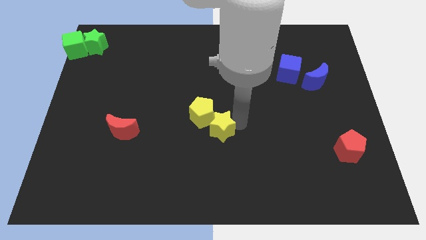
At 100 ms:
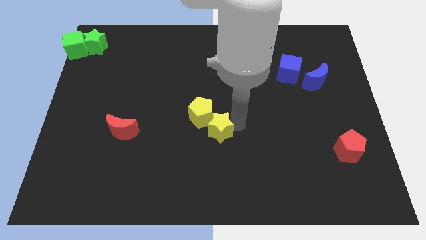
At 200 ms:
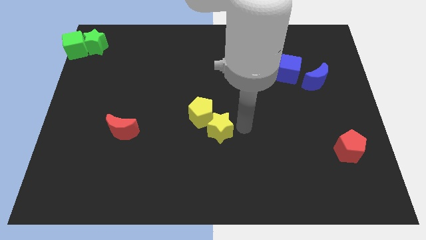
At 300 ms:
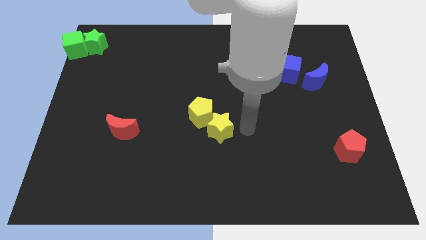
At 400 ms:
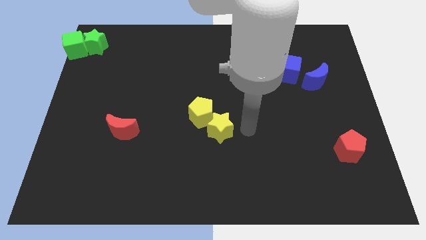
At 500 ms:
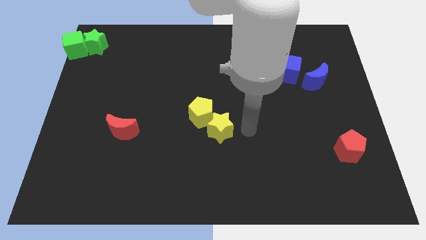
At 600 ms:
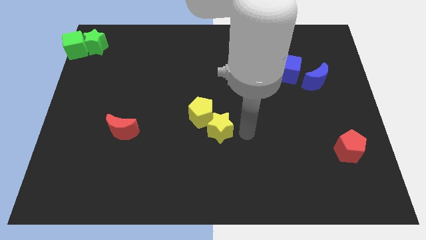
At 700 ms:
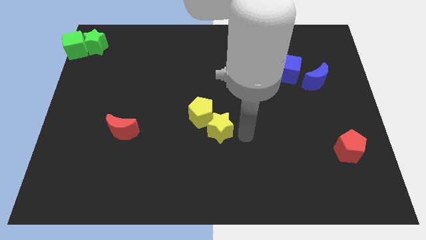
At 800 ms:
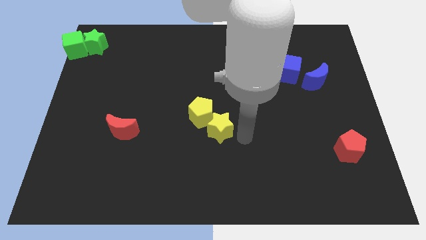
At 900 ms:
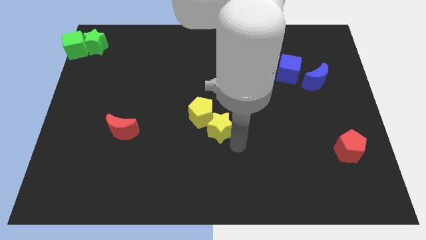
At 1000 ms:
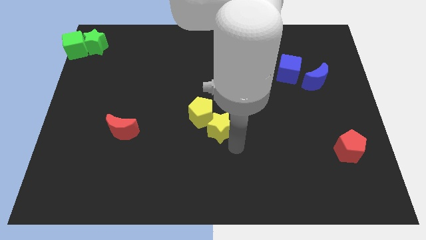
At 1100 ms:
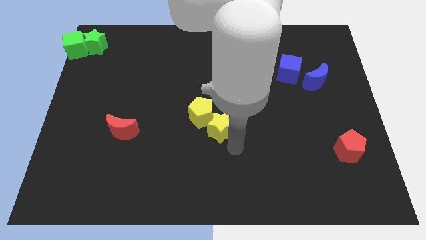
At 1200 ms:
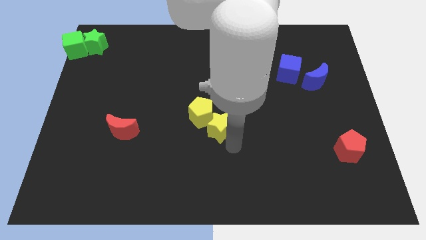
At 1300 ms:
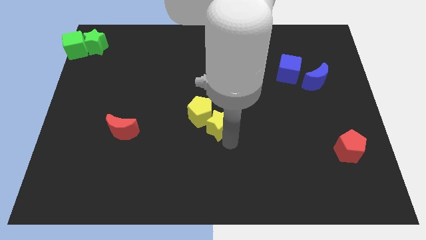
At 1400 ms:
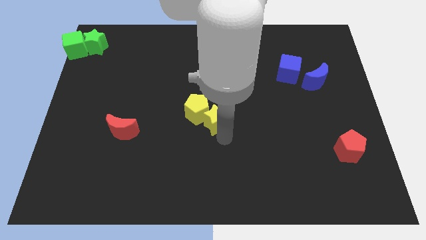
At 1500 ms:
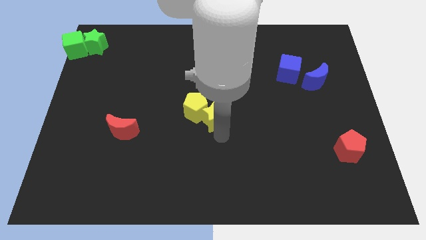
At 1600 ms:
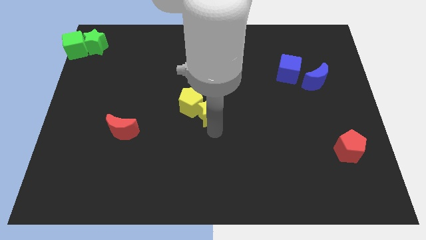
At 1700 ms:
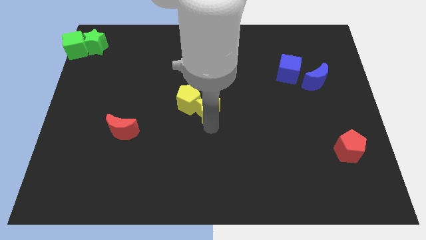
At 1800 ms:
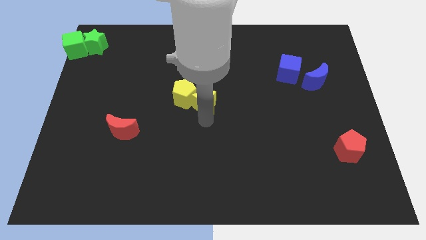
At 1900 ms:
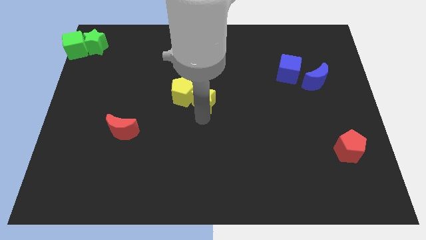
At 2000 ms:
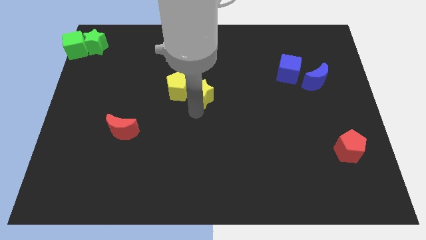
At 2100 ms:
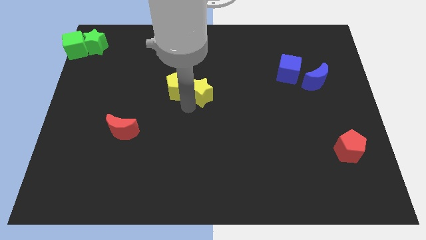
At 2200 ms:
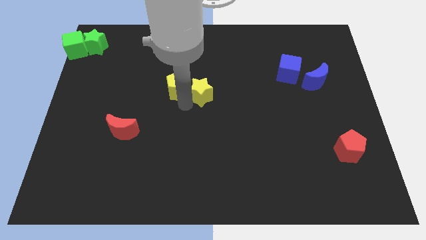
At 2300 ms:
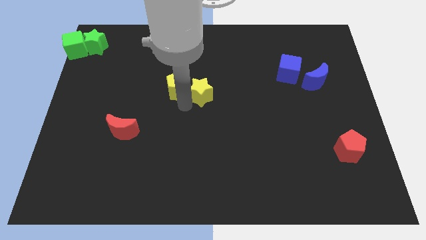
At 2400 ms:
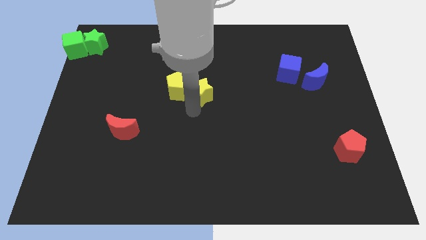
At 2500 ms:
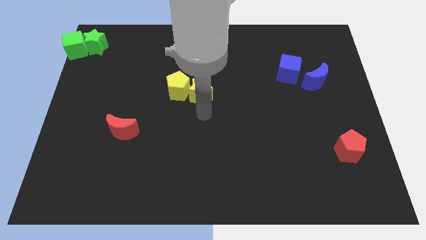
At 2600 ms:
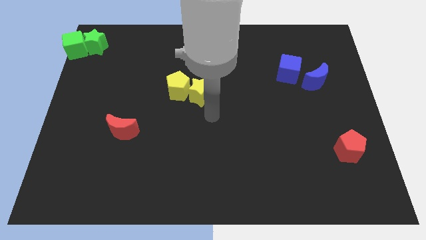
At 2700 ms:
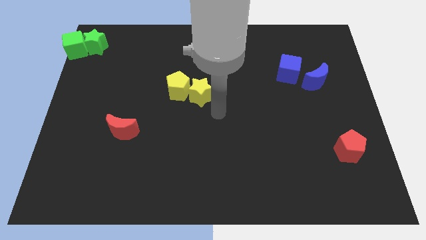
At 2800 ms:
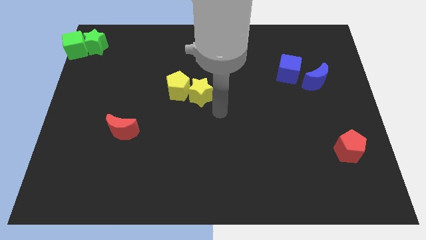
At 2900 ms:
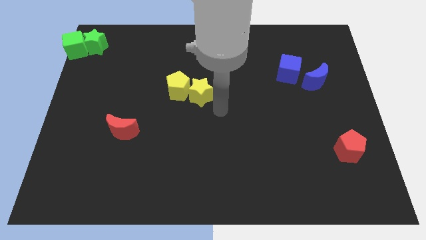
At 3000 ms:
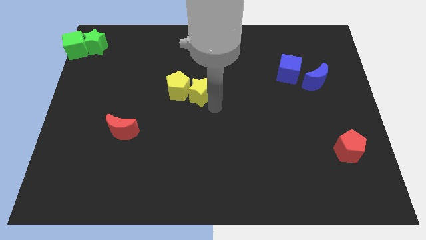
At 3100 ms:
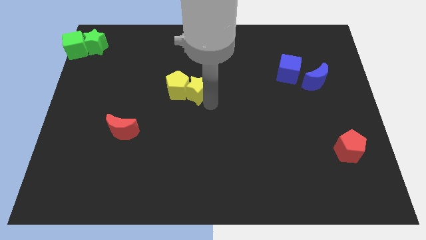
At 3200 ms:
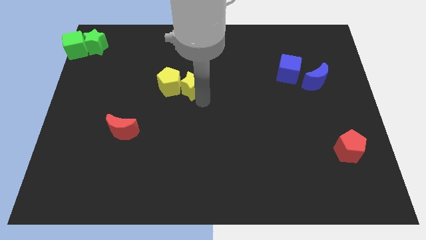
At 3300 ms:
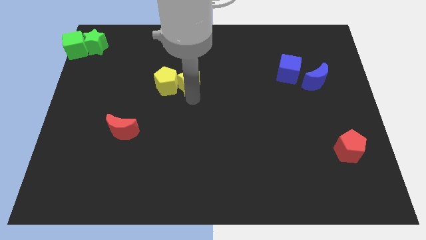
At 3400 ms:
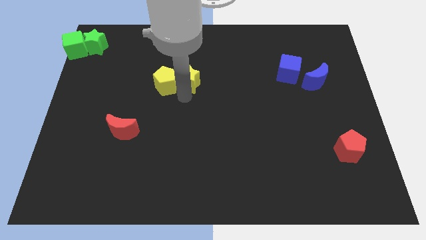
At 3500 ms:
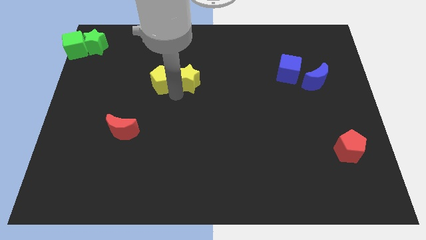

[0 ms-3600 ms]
move the yellow blocks to the top right of the red crescent

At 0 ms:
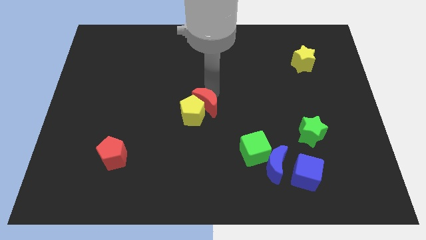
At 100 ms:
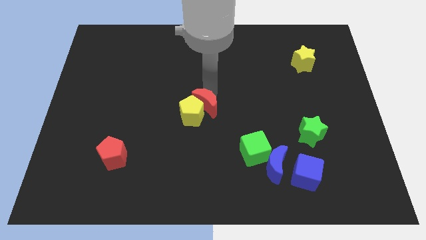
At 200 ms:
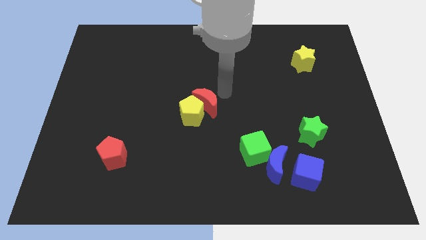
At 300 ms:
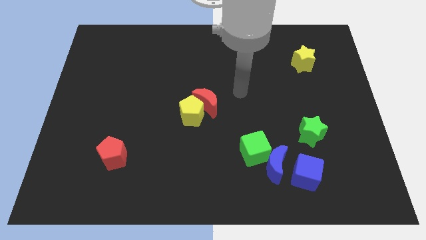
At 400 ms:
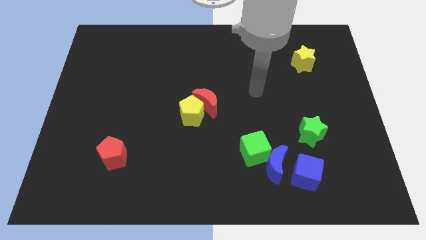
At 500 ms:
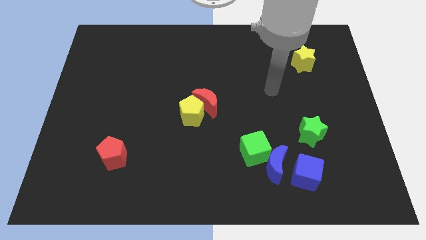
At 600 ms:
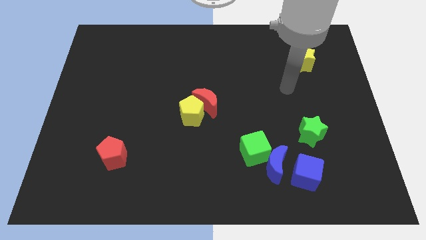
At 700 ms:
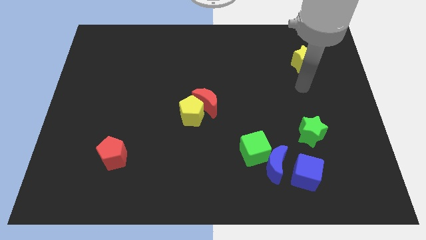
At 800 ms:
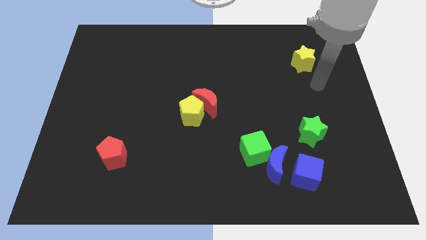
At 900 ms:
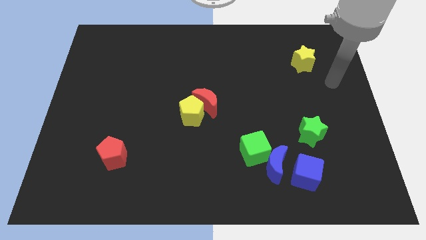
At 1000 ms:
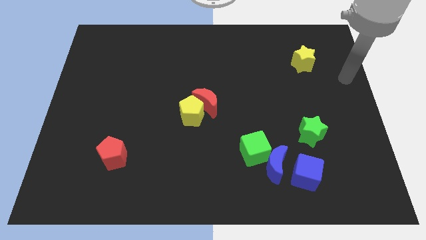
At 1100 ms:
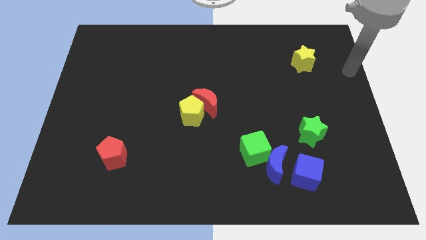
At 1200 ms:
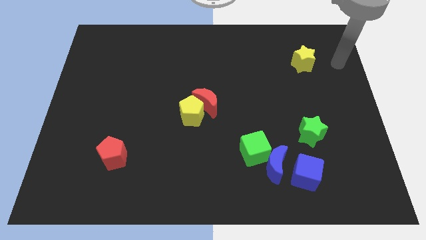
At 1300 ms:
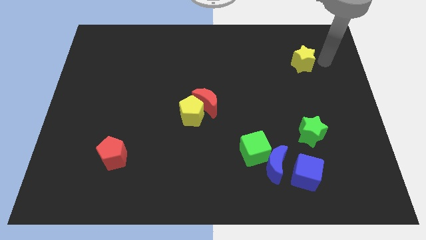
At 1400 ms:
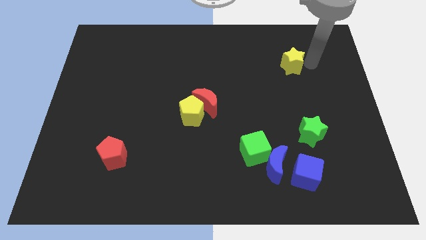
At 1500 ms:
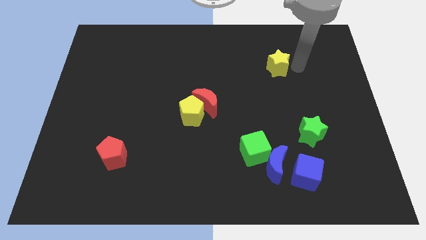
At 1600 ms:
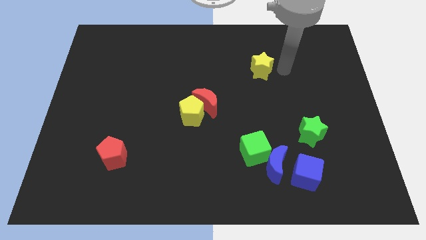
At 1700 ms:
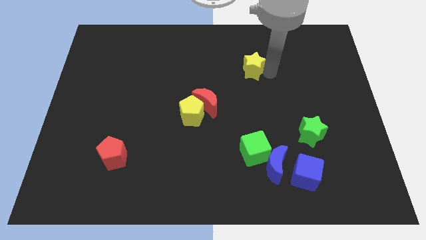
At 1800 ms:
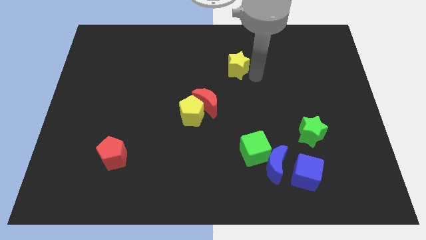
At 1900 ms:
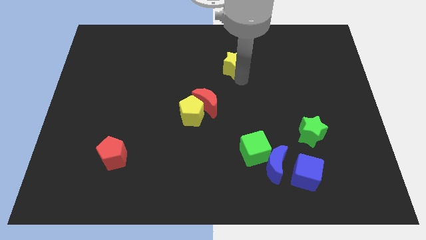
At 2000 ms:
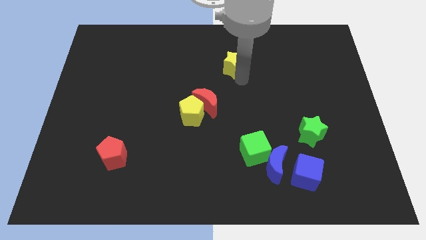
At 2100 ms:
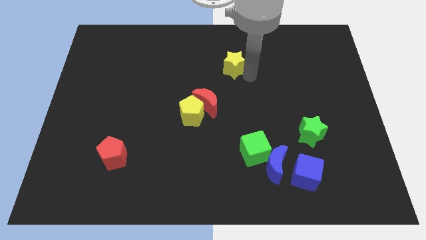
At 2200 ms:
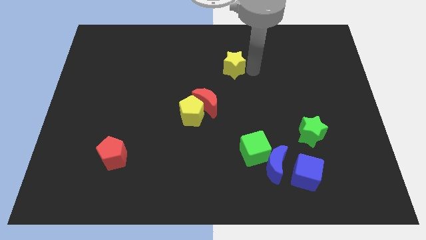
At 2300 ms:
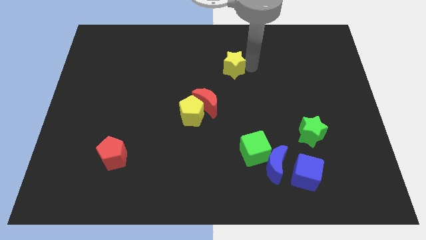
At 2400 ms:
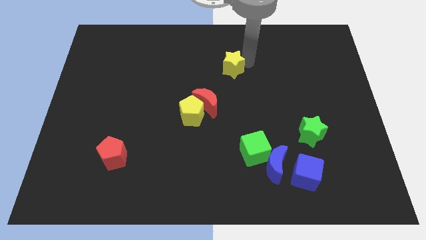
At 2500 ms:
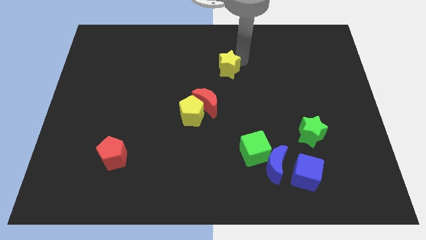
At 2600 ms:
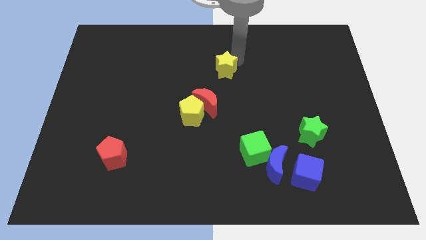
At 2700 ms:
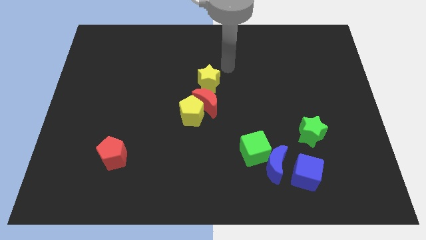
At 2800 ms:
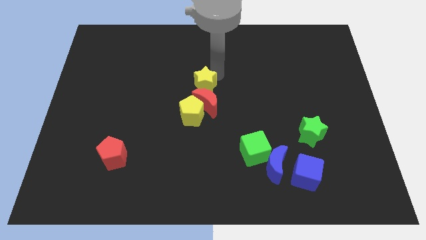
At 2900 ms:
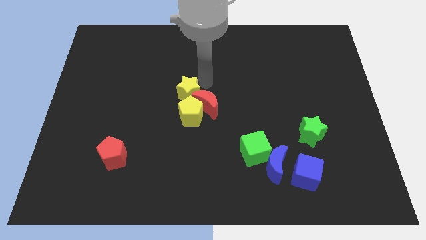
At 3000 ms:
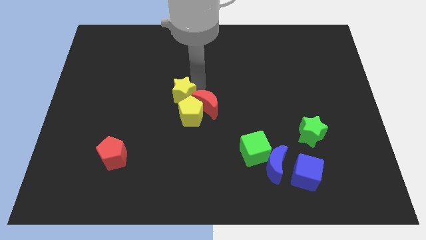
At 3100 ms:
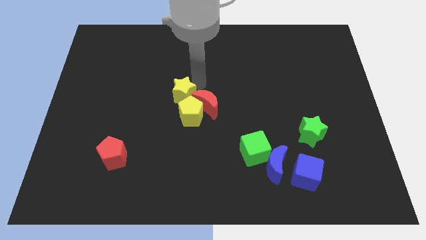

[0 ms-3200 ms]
drag yellow star near yellow pentagon and red moon

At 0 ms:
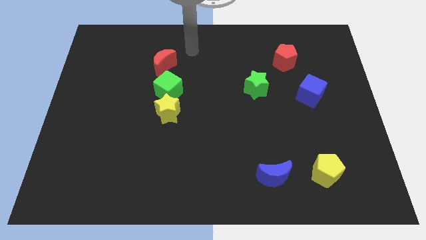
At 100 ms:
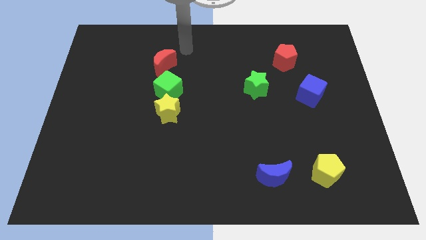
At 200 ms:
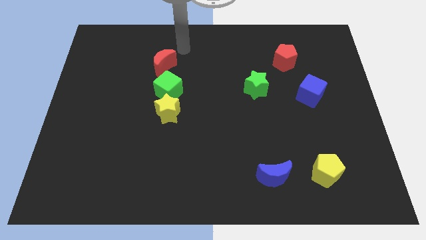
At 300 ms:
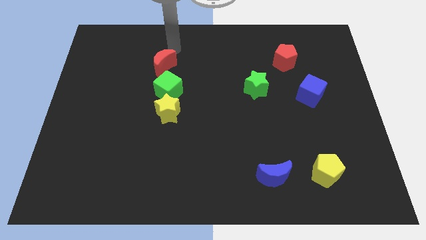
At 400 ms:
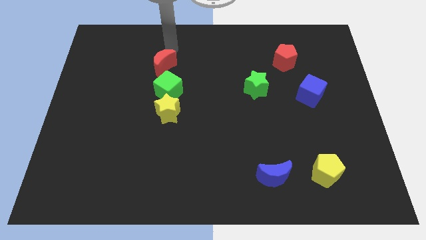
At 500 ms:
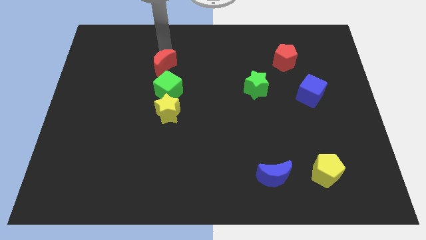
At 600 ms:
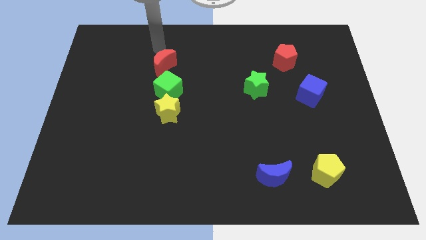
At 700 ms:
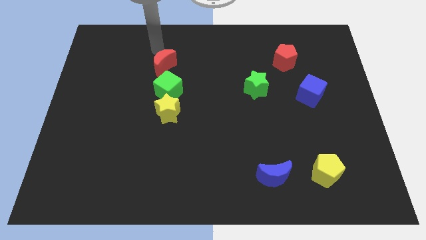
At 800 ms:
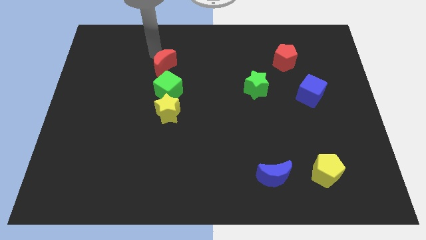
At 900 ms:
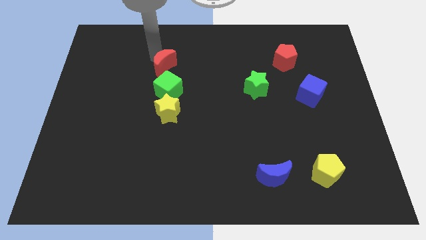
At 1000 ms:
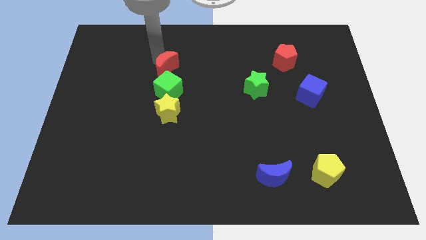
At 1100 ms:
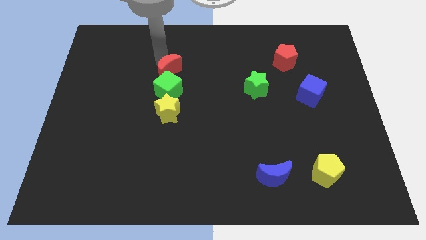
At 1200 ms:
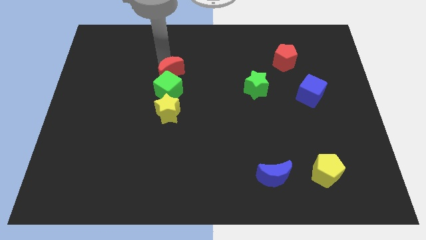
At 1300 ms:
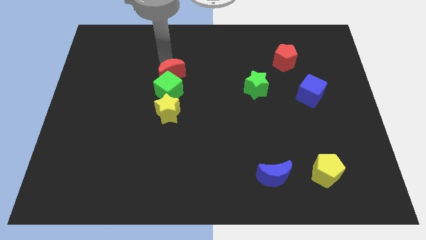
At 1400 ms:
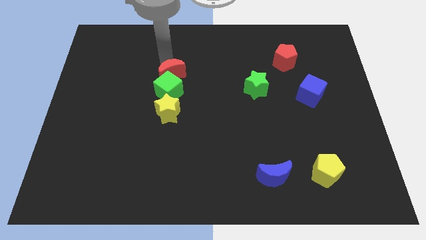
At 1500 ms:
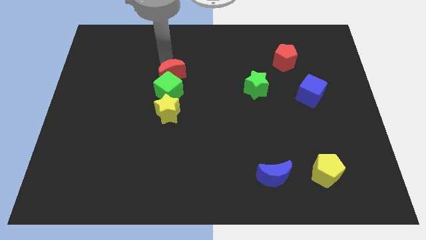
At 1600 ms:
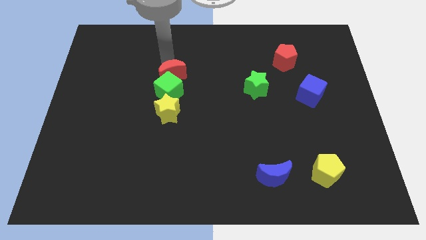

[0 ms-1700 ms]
push red moon into green cube

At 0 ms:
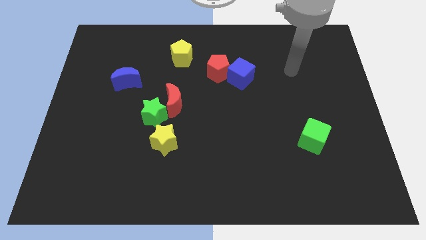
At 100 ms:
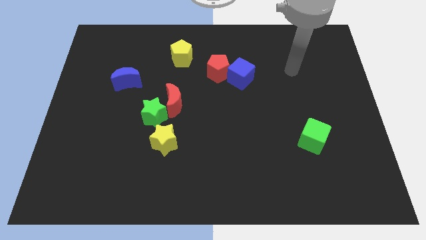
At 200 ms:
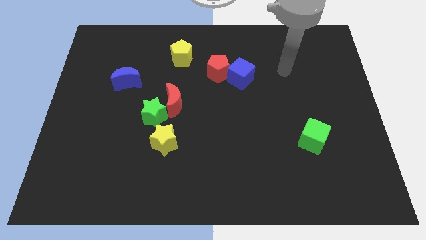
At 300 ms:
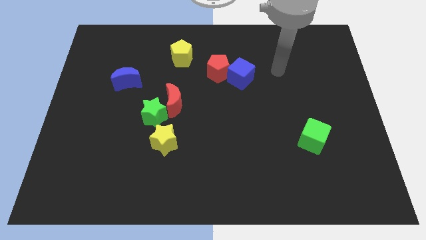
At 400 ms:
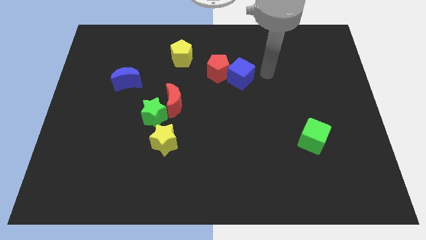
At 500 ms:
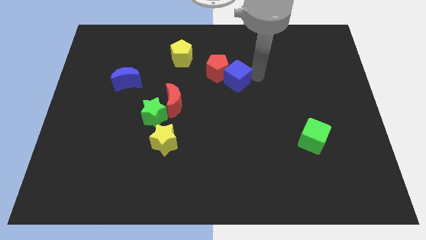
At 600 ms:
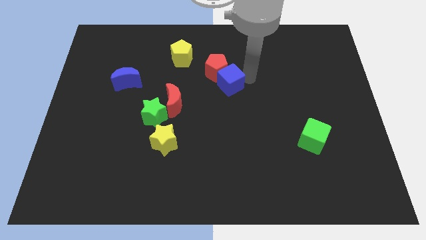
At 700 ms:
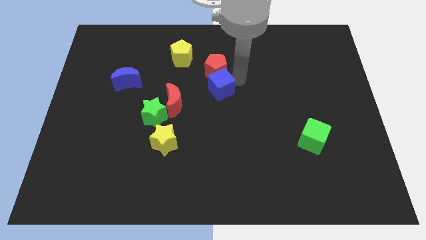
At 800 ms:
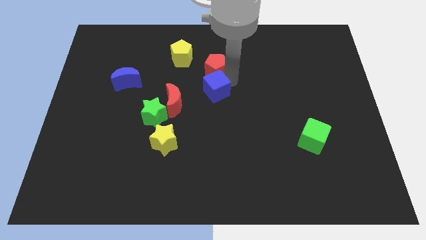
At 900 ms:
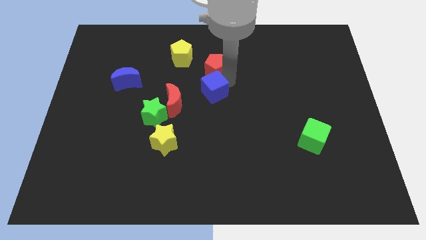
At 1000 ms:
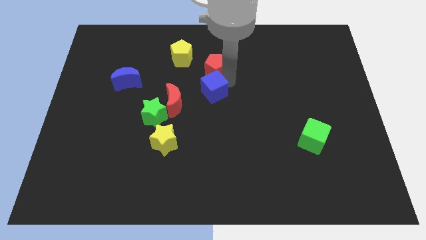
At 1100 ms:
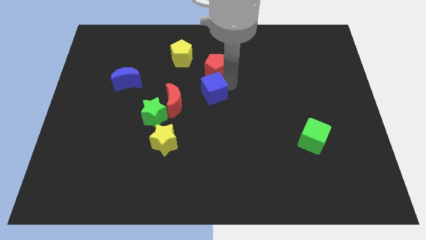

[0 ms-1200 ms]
place the blue cube below the red pentagon
